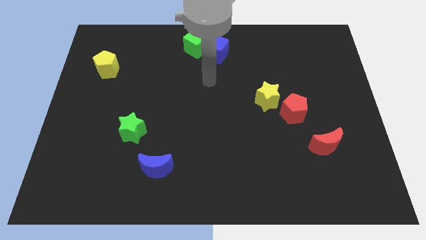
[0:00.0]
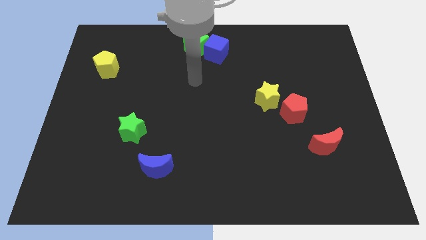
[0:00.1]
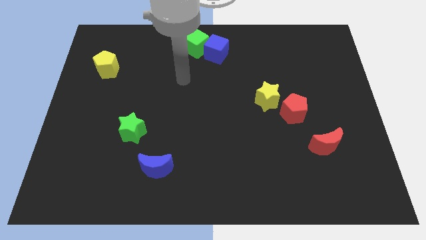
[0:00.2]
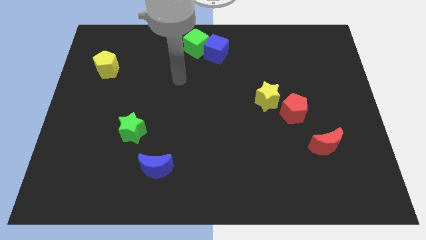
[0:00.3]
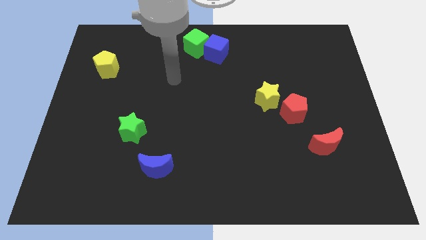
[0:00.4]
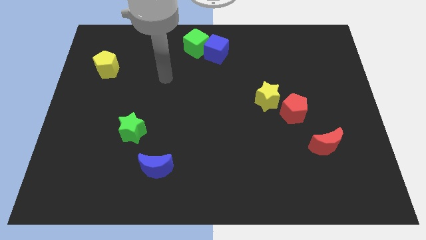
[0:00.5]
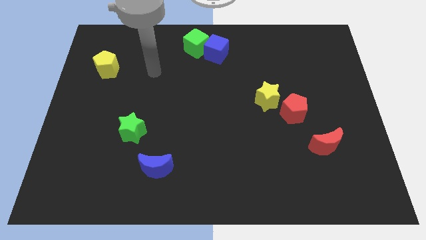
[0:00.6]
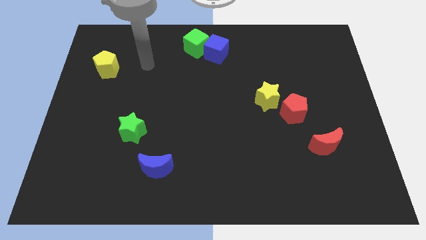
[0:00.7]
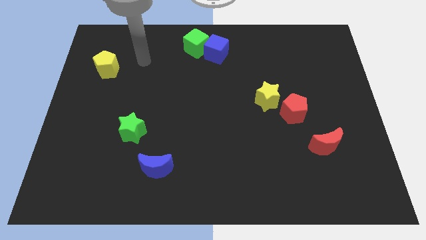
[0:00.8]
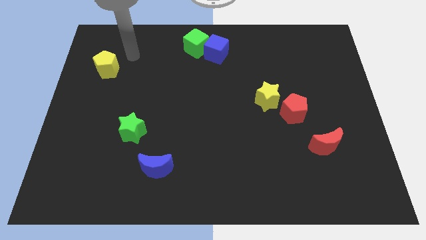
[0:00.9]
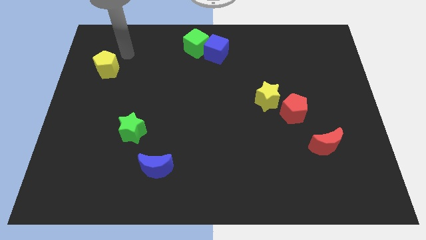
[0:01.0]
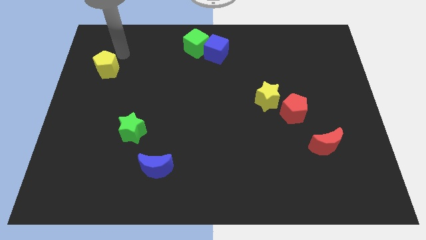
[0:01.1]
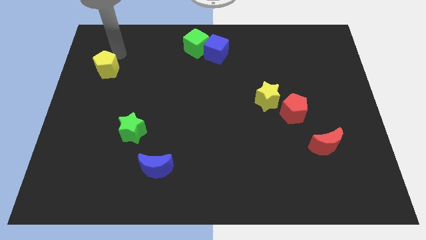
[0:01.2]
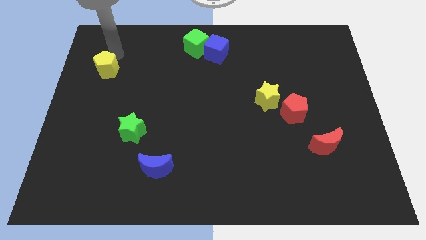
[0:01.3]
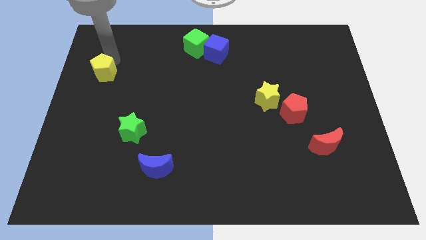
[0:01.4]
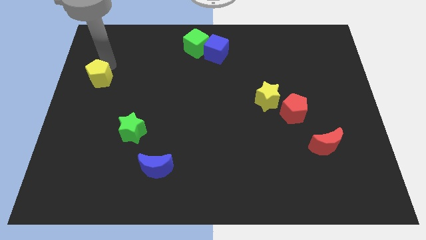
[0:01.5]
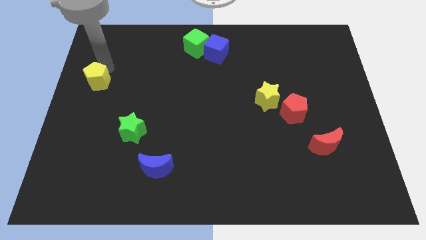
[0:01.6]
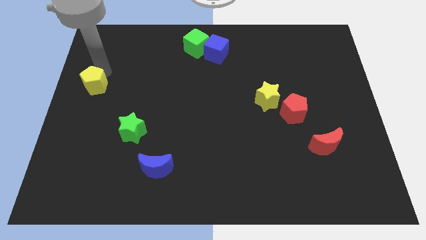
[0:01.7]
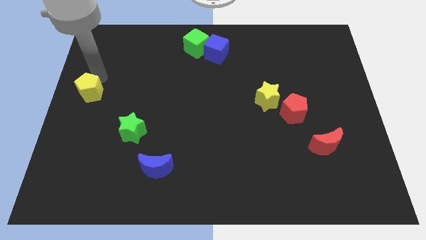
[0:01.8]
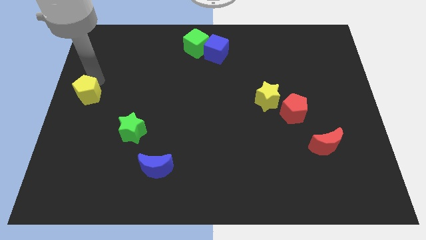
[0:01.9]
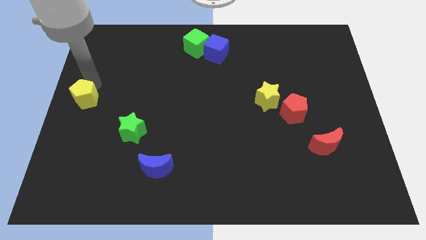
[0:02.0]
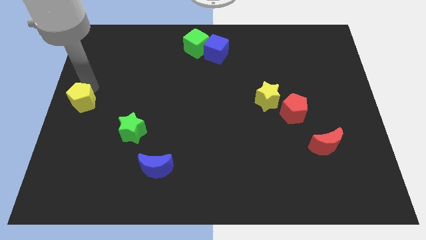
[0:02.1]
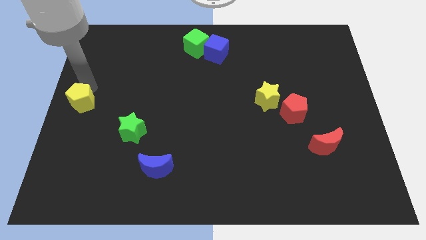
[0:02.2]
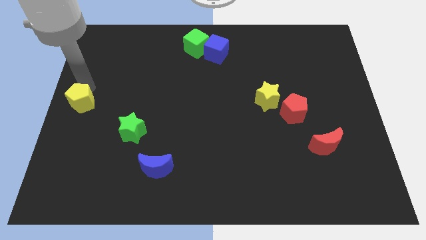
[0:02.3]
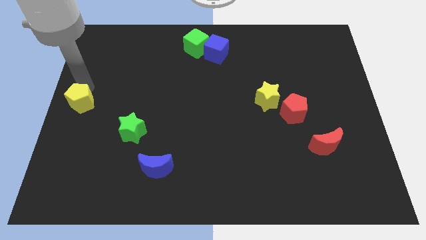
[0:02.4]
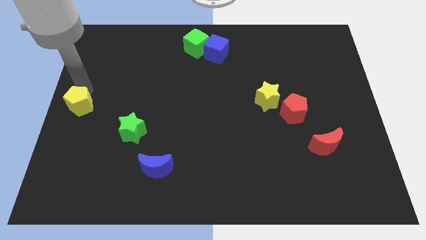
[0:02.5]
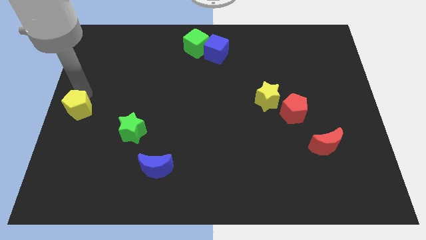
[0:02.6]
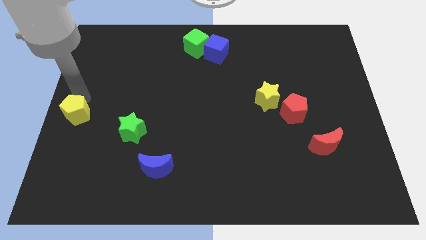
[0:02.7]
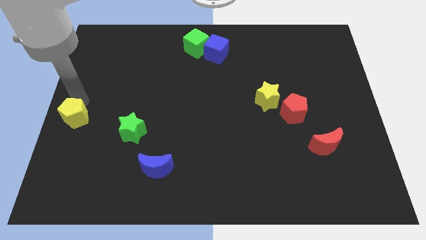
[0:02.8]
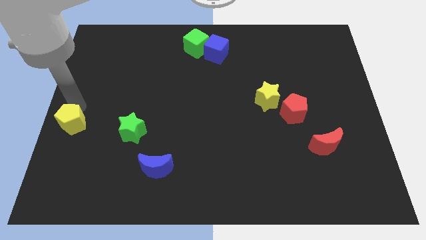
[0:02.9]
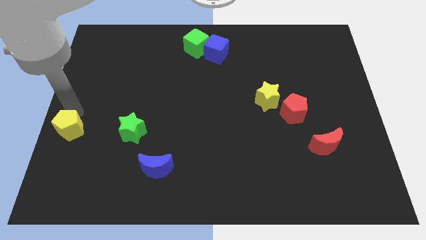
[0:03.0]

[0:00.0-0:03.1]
slide the yellow pentagon slightly towards down

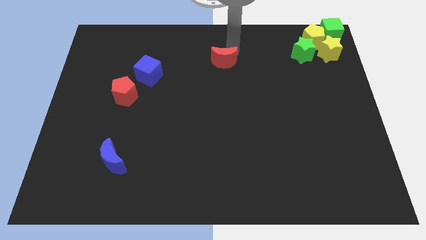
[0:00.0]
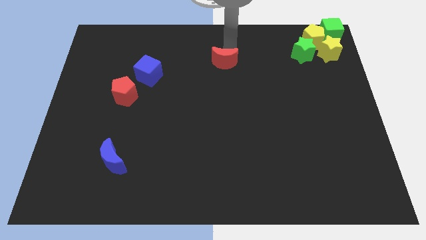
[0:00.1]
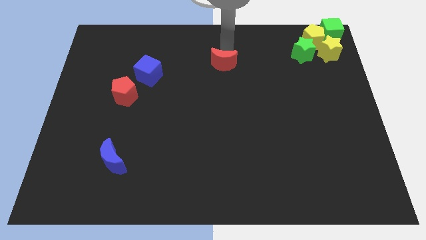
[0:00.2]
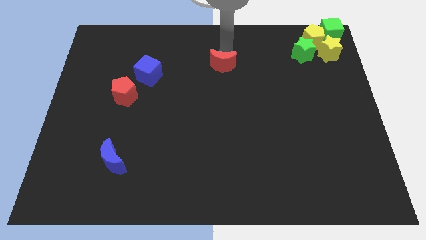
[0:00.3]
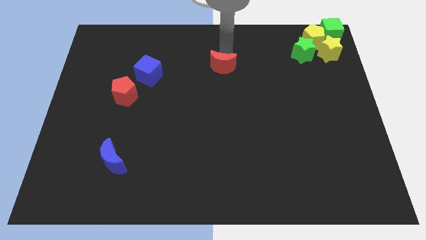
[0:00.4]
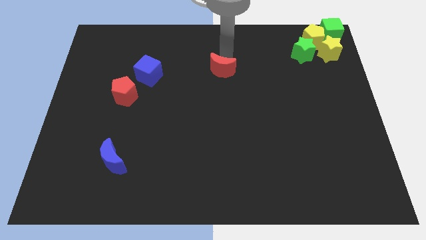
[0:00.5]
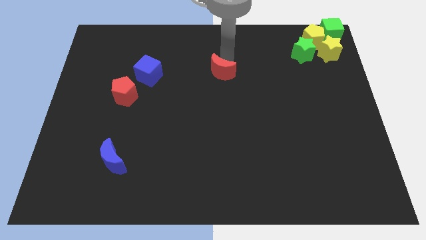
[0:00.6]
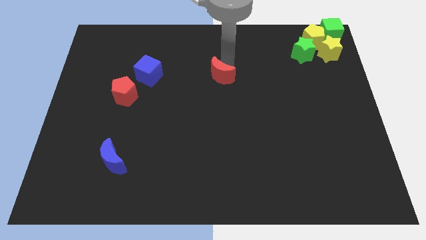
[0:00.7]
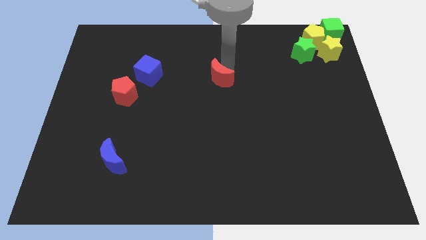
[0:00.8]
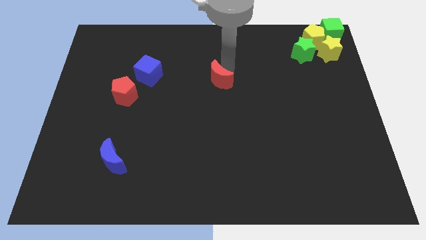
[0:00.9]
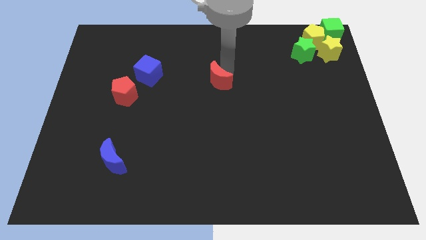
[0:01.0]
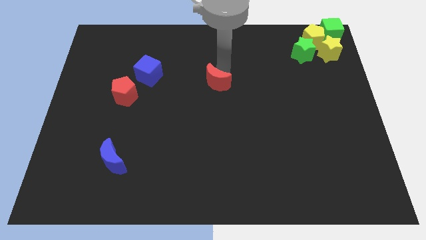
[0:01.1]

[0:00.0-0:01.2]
move the red crescent slightly towards the center

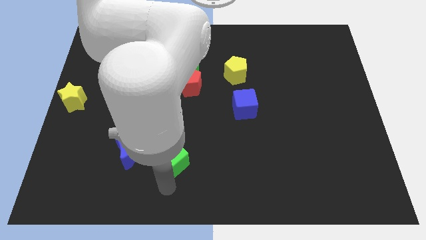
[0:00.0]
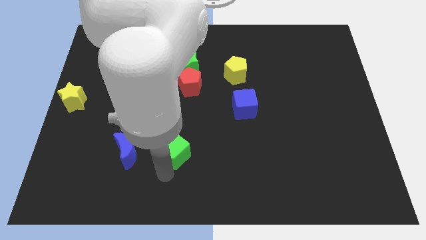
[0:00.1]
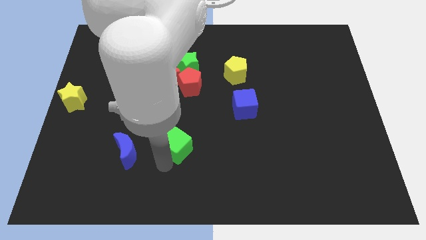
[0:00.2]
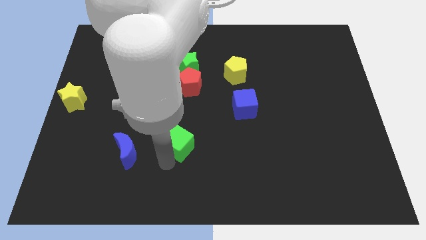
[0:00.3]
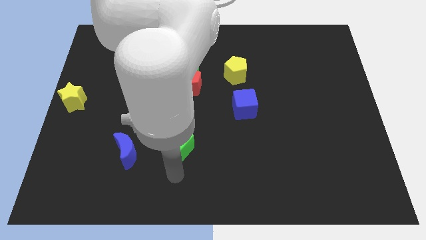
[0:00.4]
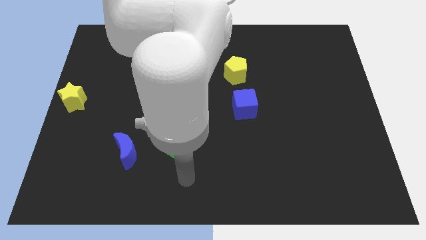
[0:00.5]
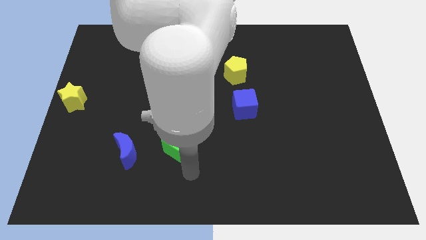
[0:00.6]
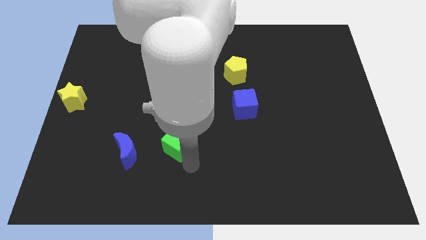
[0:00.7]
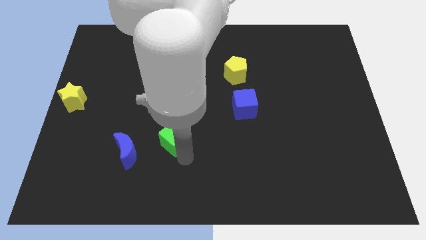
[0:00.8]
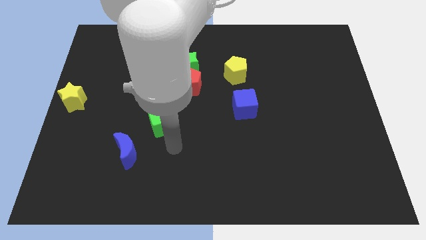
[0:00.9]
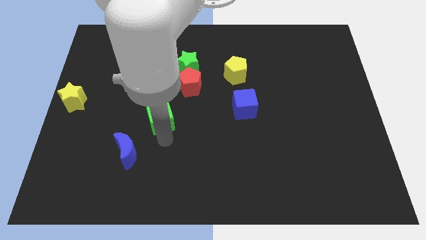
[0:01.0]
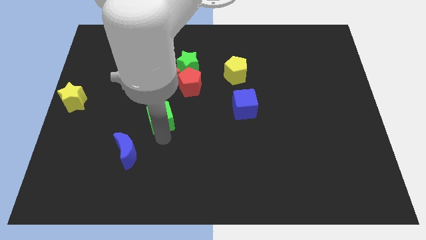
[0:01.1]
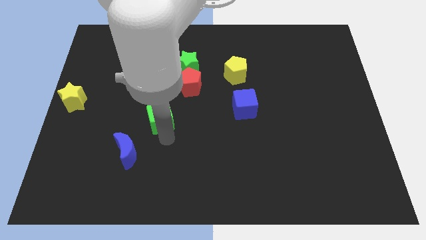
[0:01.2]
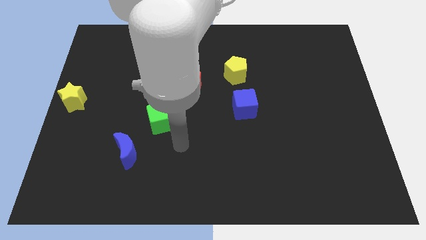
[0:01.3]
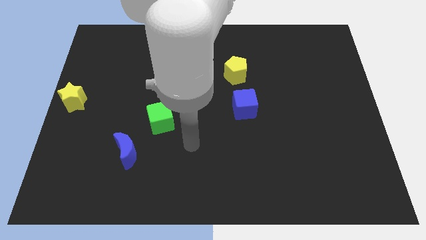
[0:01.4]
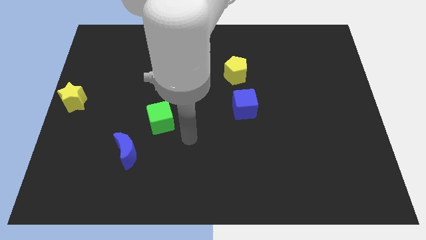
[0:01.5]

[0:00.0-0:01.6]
slightly move the green cube to the center of the board

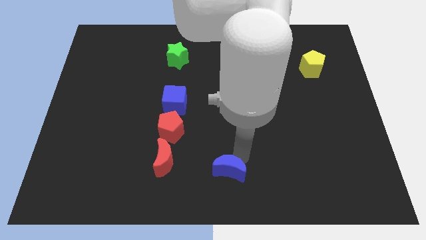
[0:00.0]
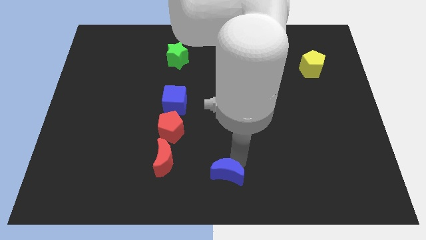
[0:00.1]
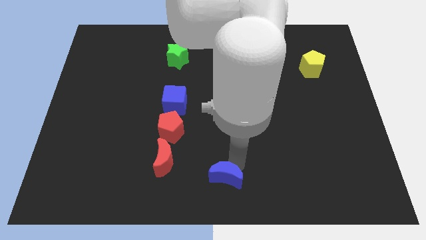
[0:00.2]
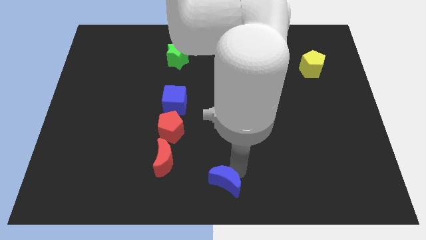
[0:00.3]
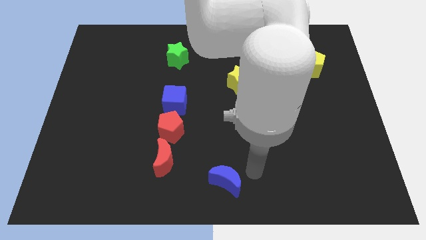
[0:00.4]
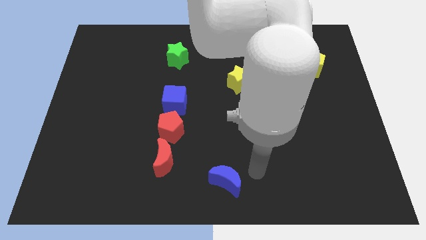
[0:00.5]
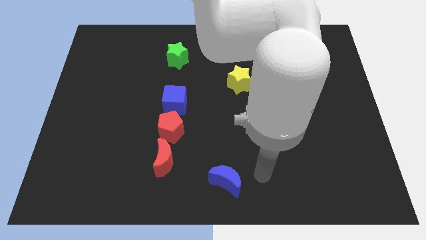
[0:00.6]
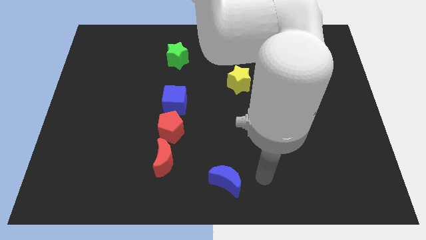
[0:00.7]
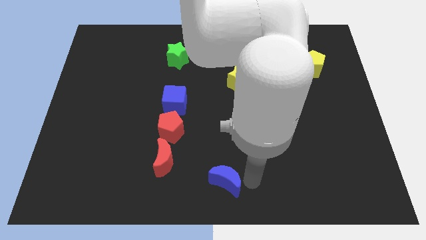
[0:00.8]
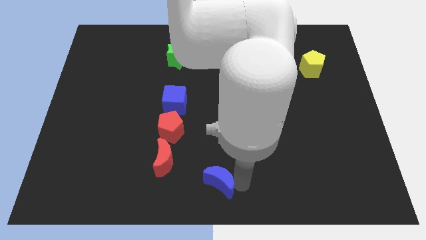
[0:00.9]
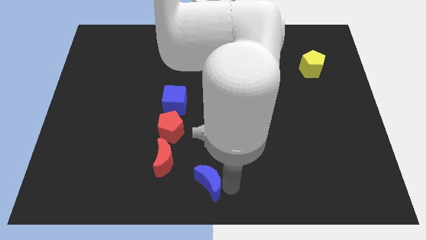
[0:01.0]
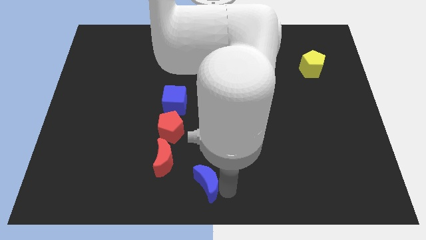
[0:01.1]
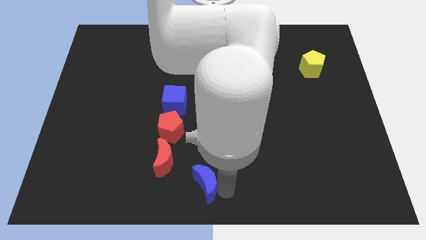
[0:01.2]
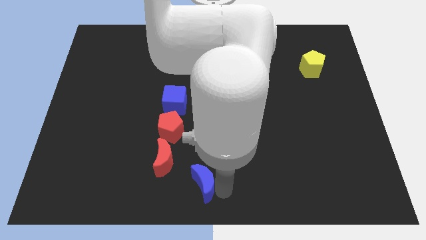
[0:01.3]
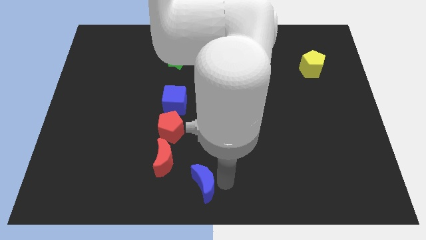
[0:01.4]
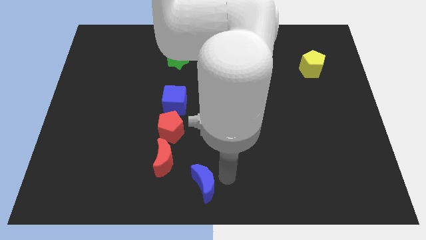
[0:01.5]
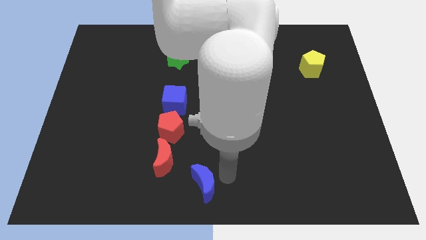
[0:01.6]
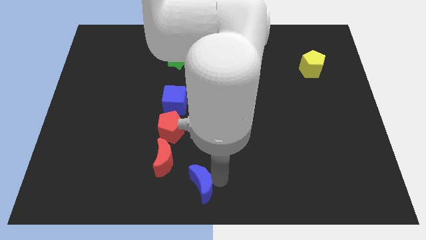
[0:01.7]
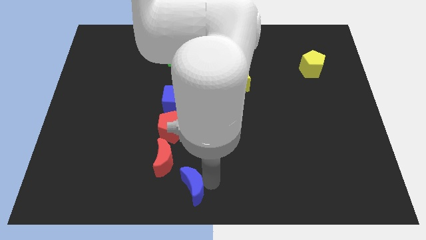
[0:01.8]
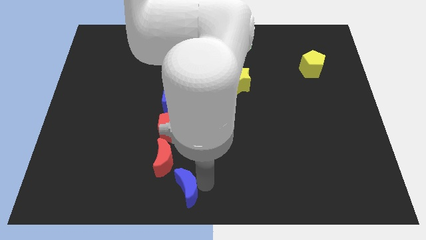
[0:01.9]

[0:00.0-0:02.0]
push blue moon towards the bottom right of the red crescent

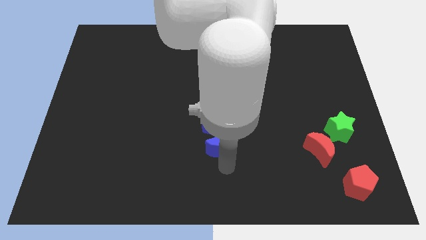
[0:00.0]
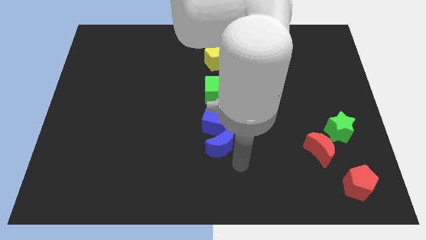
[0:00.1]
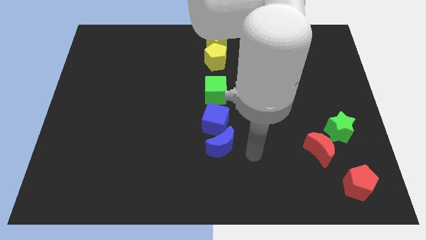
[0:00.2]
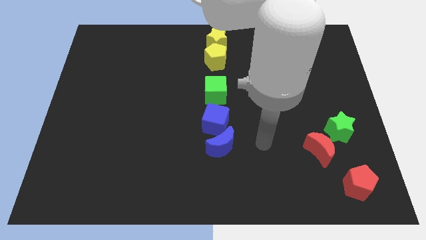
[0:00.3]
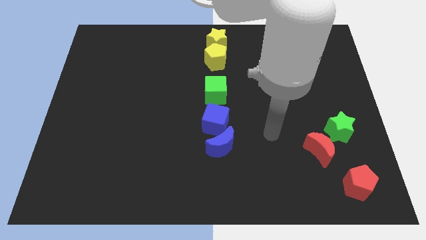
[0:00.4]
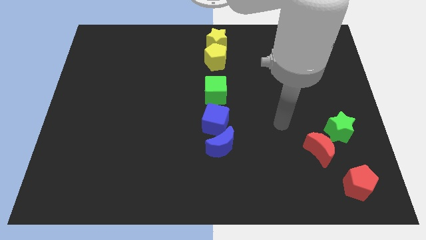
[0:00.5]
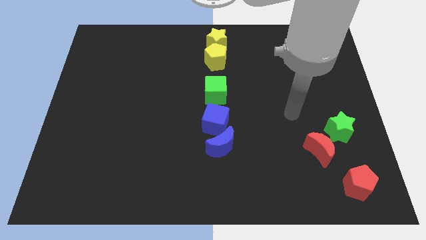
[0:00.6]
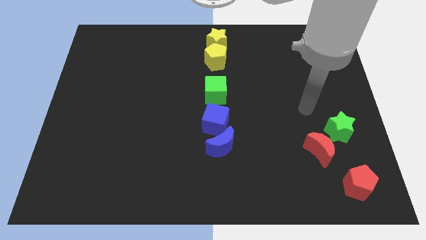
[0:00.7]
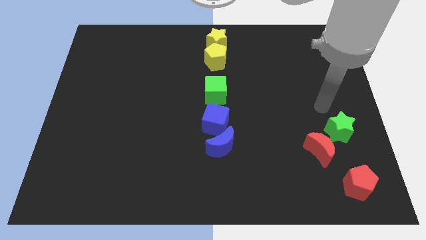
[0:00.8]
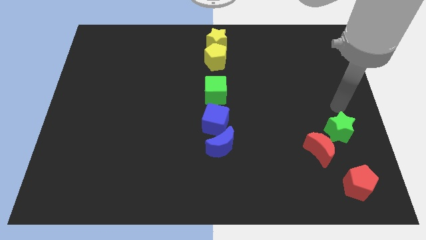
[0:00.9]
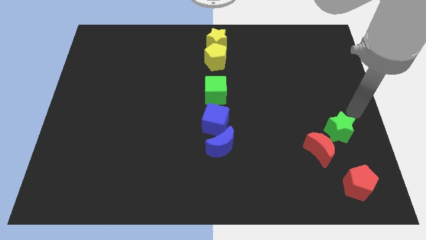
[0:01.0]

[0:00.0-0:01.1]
go away from the blue moon
